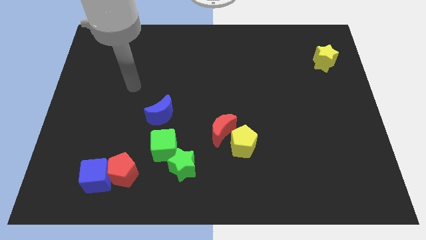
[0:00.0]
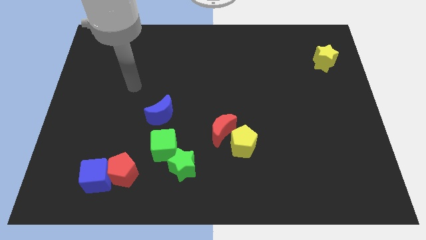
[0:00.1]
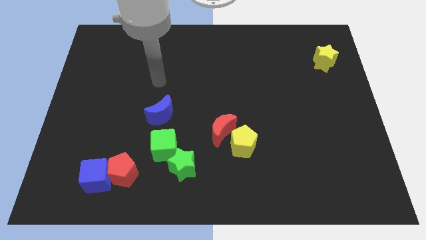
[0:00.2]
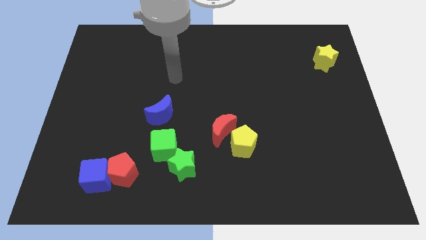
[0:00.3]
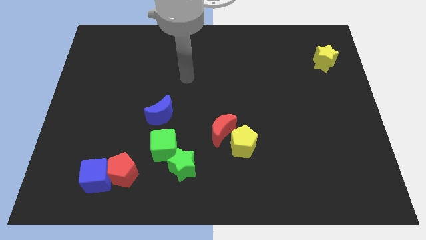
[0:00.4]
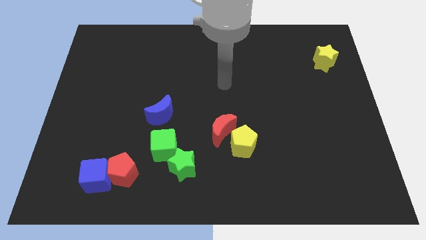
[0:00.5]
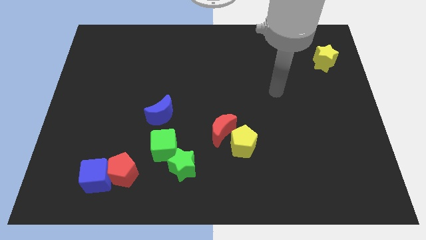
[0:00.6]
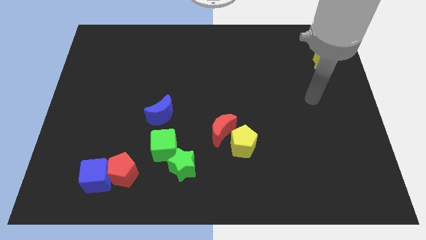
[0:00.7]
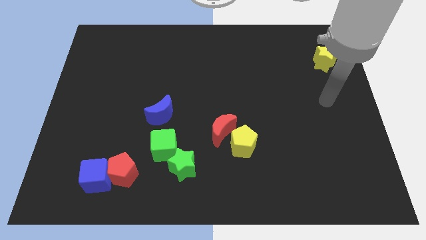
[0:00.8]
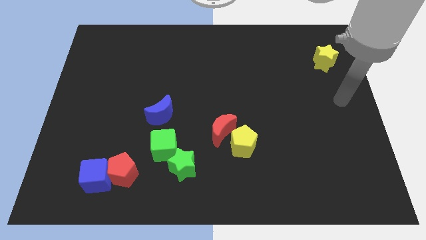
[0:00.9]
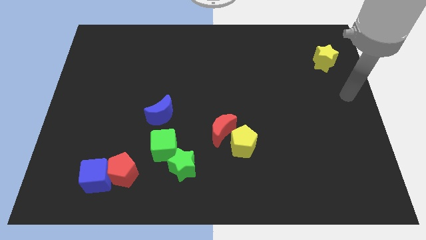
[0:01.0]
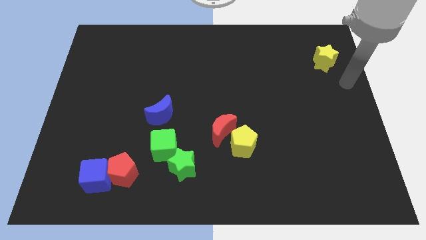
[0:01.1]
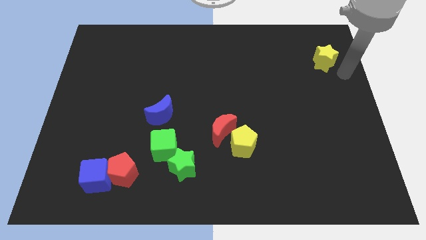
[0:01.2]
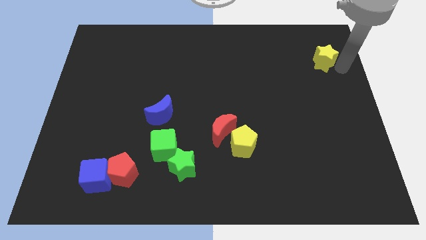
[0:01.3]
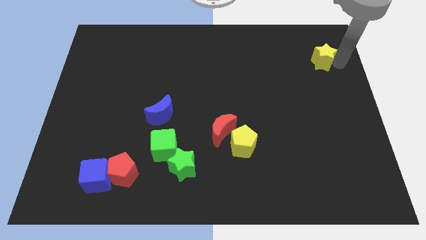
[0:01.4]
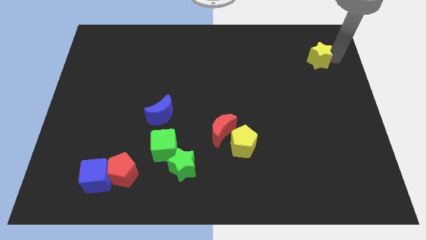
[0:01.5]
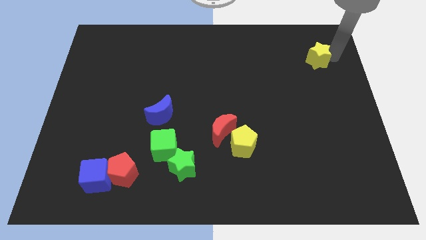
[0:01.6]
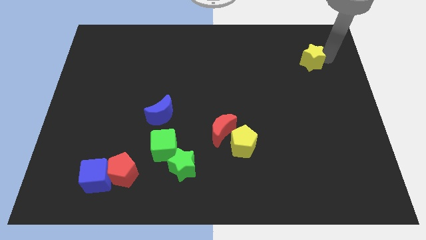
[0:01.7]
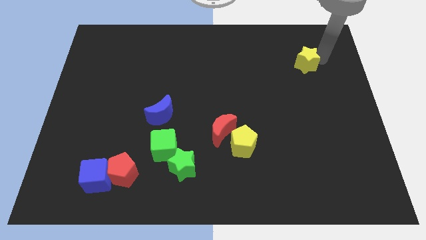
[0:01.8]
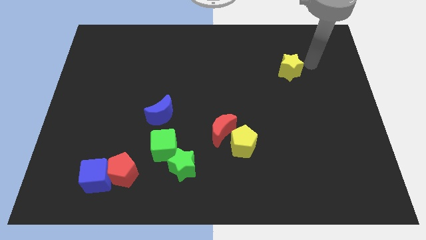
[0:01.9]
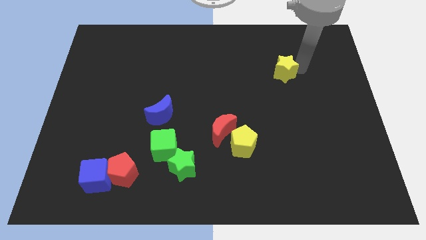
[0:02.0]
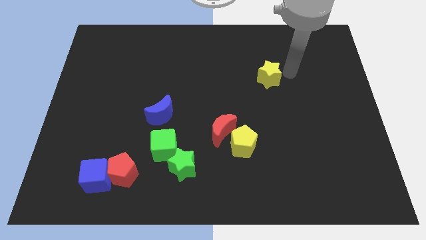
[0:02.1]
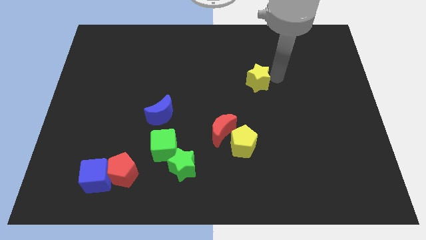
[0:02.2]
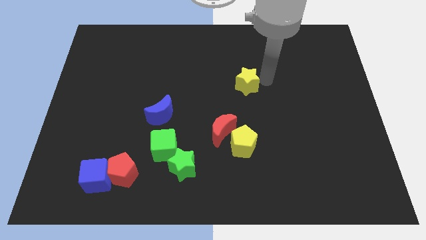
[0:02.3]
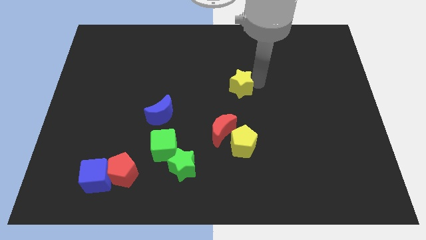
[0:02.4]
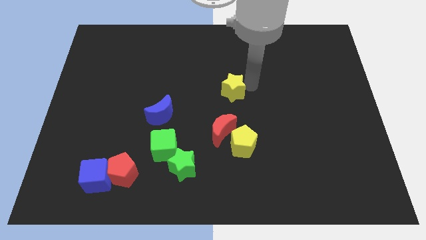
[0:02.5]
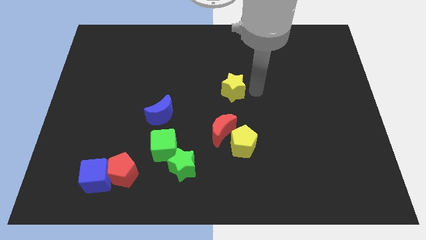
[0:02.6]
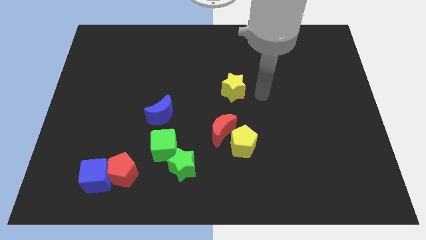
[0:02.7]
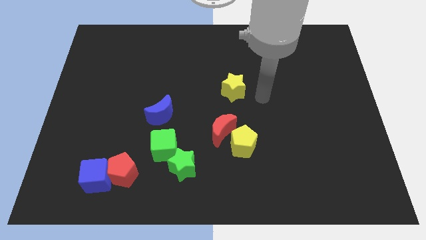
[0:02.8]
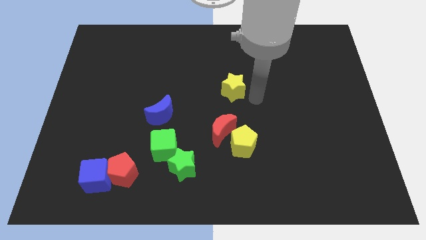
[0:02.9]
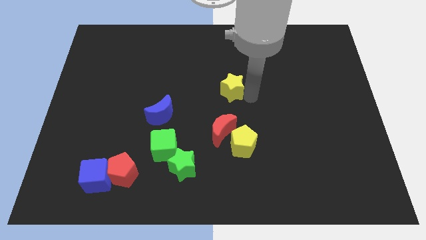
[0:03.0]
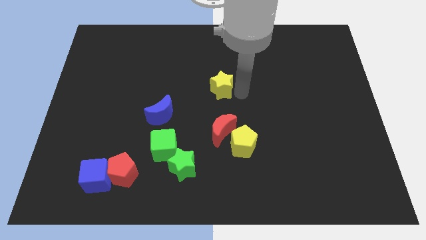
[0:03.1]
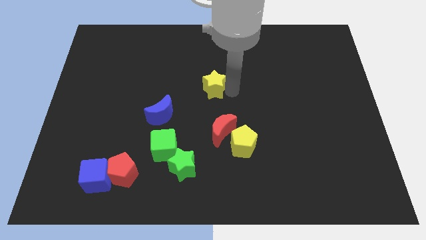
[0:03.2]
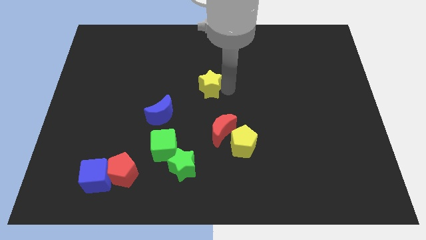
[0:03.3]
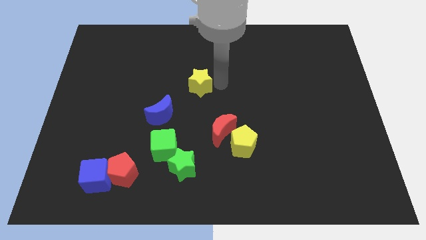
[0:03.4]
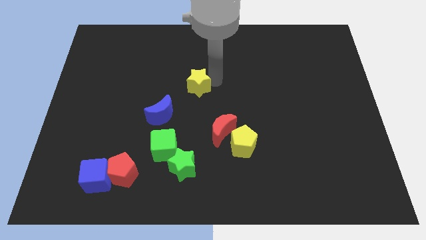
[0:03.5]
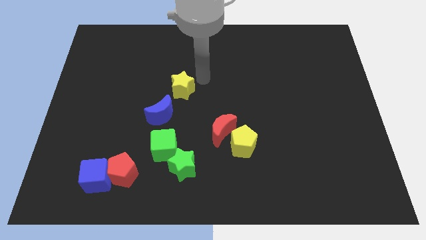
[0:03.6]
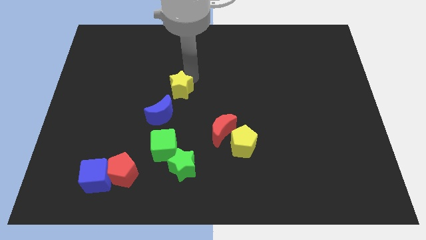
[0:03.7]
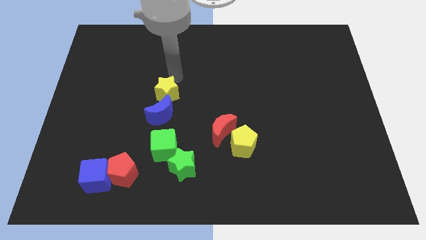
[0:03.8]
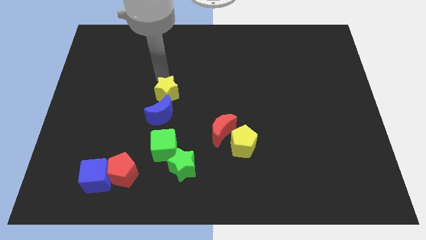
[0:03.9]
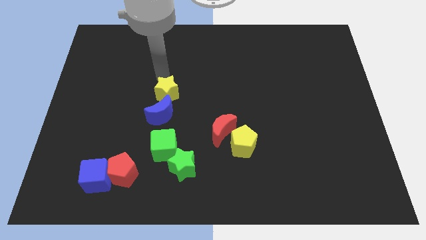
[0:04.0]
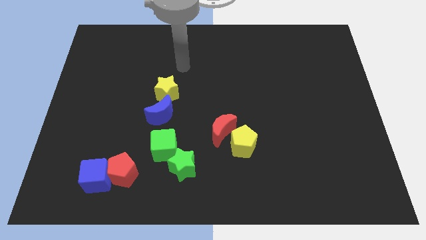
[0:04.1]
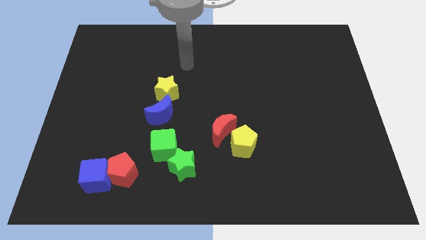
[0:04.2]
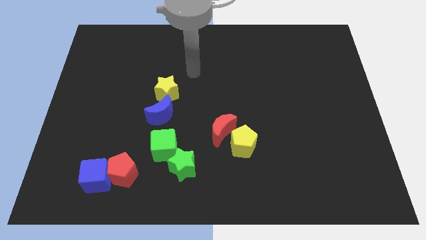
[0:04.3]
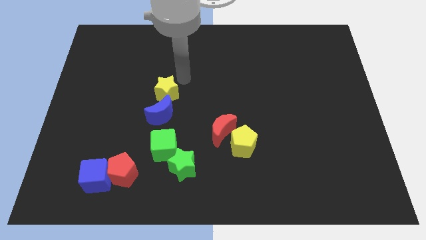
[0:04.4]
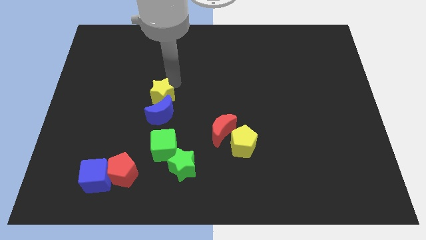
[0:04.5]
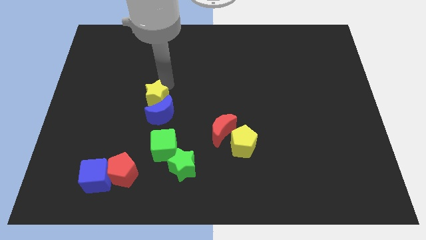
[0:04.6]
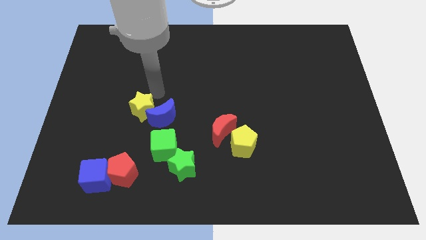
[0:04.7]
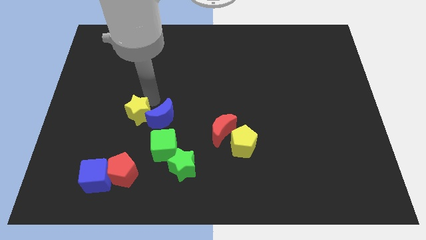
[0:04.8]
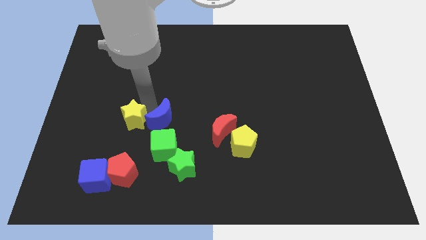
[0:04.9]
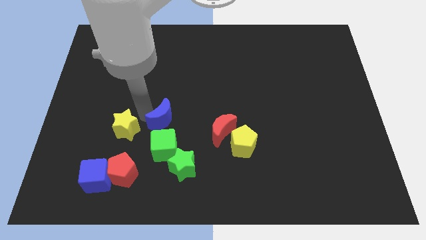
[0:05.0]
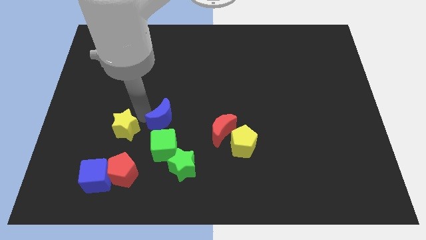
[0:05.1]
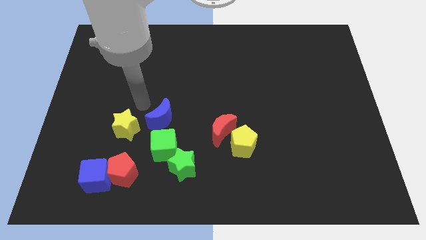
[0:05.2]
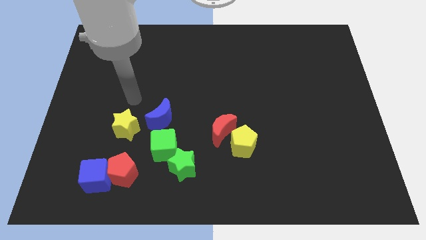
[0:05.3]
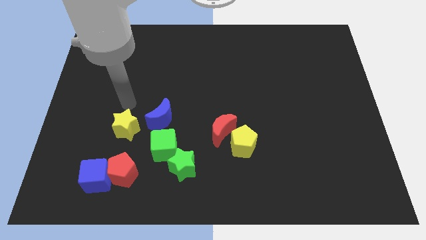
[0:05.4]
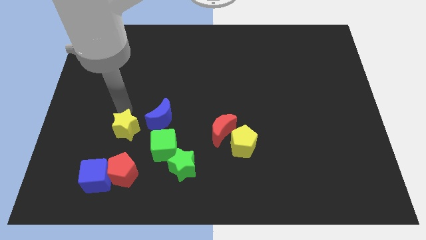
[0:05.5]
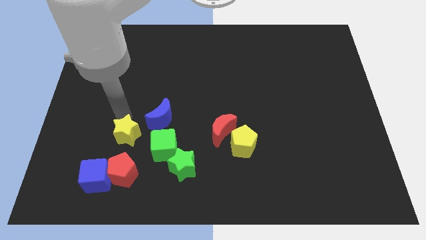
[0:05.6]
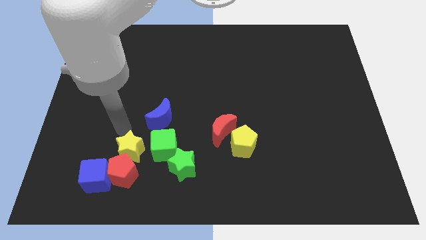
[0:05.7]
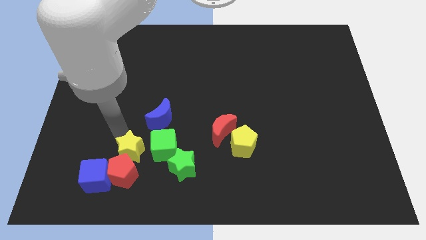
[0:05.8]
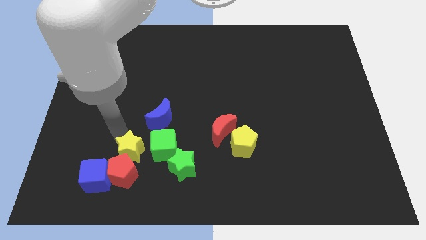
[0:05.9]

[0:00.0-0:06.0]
slide the yellow star close to the red pentagon

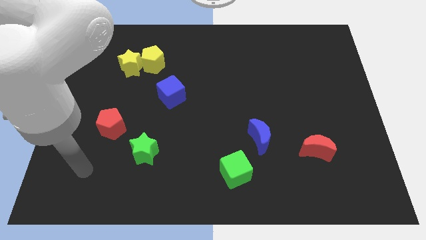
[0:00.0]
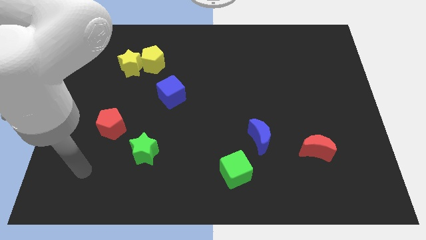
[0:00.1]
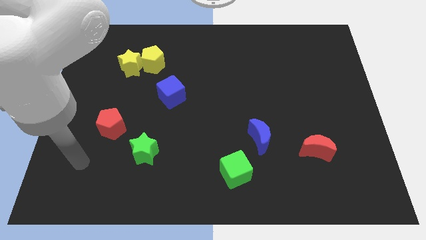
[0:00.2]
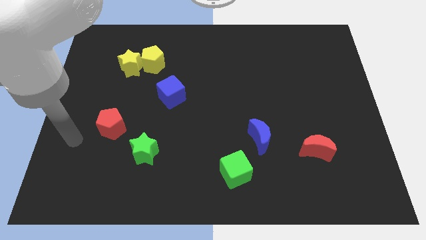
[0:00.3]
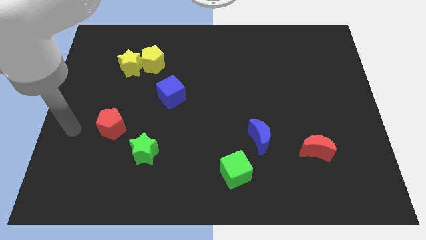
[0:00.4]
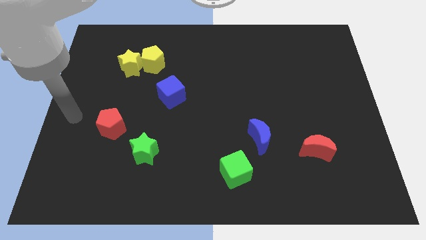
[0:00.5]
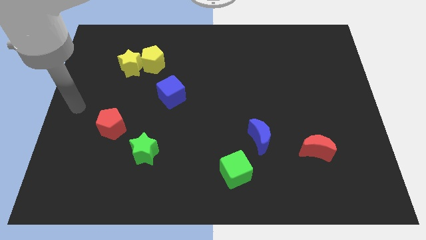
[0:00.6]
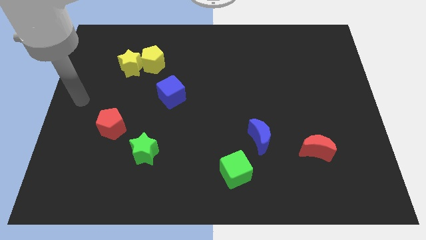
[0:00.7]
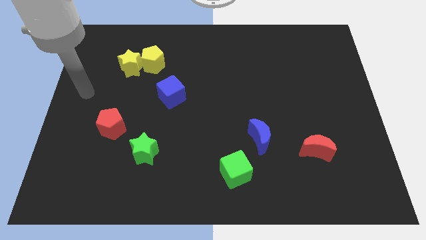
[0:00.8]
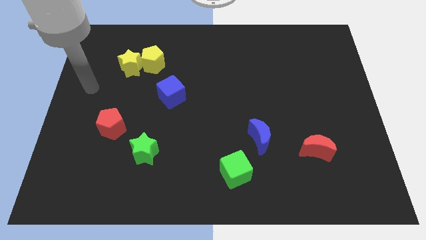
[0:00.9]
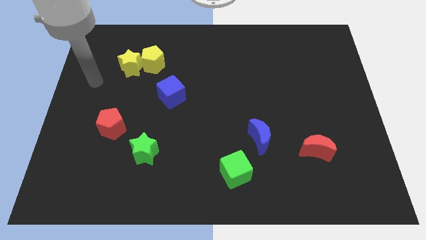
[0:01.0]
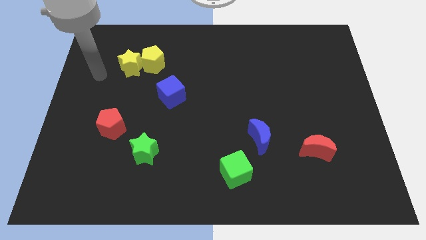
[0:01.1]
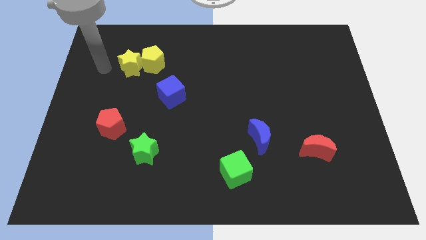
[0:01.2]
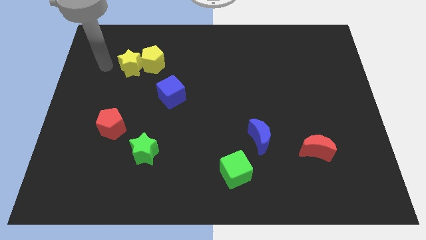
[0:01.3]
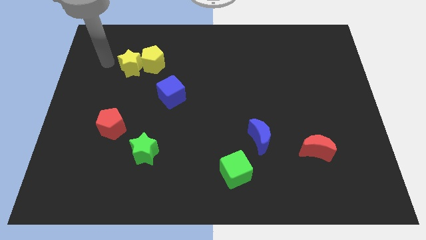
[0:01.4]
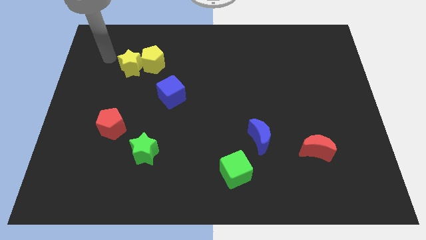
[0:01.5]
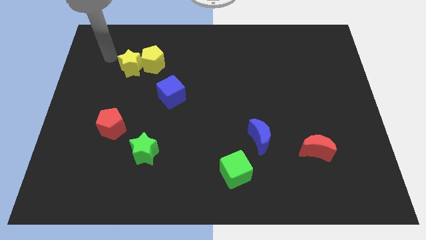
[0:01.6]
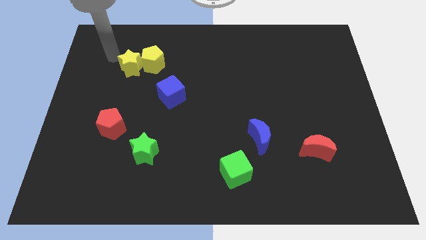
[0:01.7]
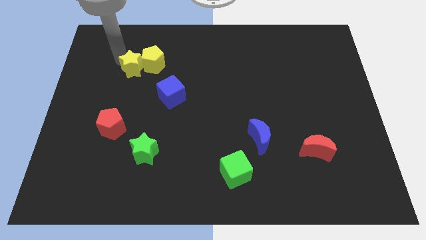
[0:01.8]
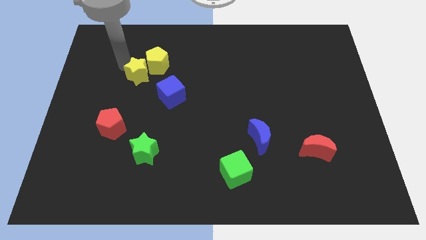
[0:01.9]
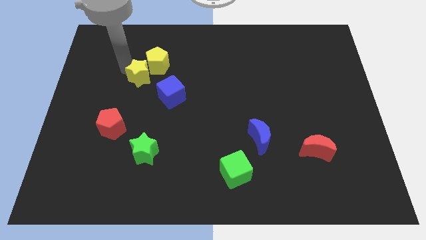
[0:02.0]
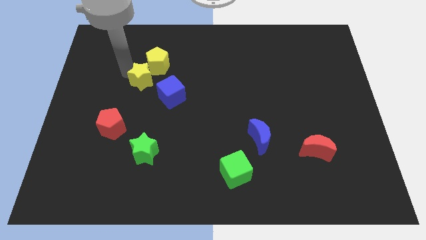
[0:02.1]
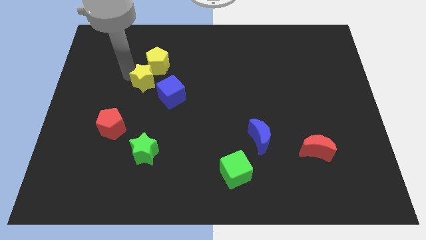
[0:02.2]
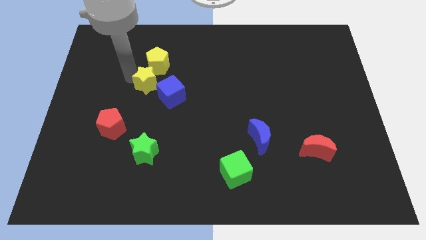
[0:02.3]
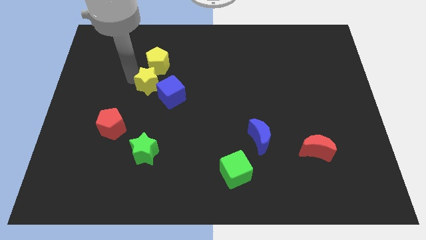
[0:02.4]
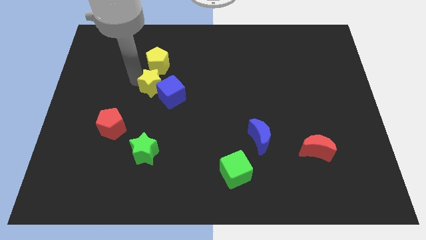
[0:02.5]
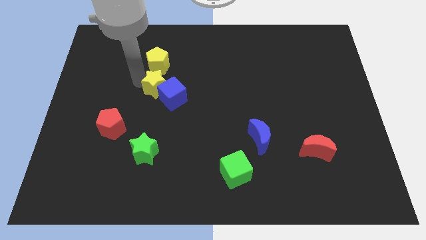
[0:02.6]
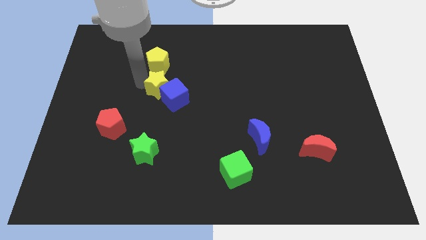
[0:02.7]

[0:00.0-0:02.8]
push the yellow star towards the blue cube

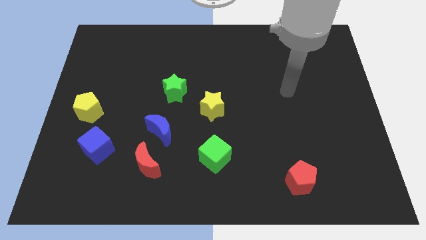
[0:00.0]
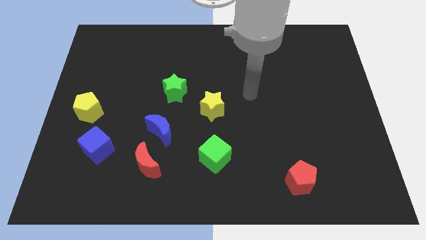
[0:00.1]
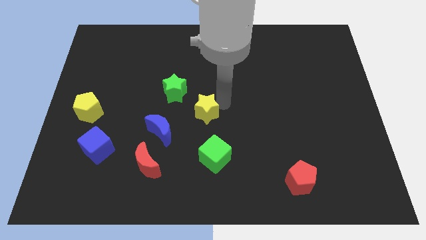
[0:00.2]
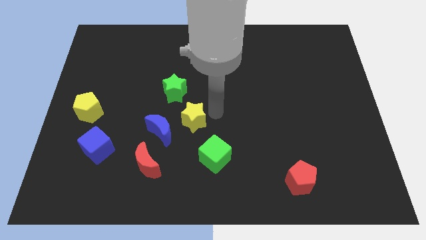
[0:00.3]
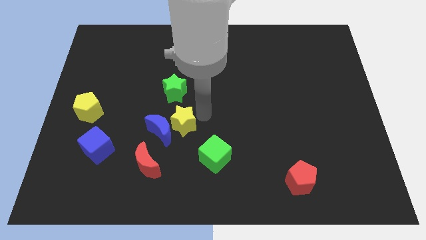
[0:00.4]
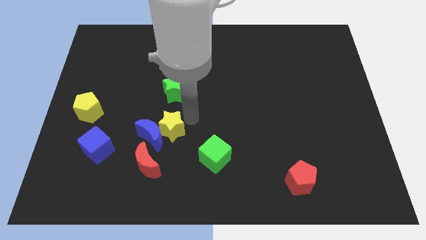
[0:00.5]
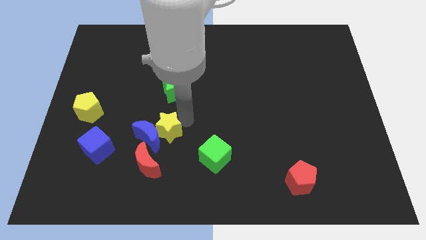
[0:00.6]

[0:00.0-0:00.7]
move the yellow star close to the blue moon
